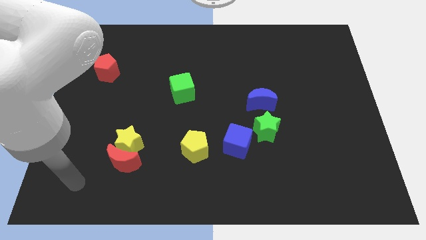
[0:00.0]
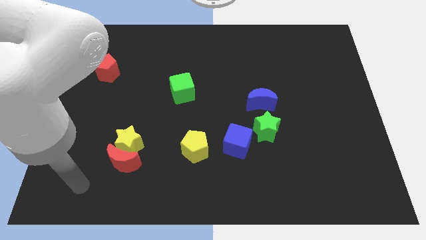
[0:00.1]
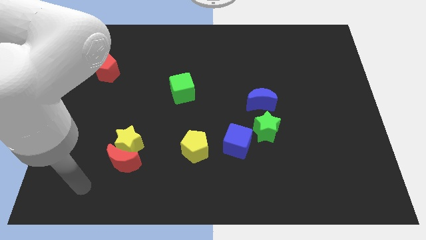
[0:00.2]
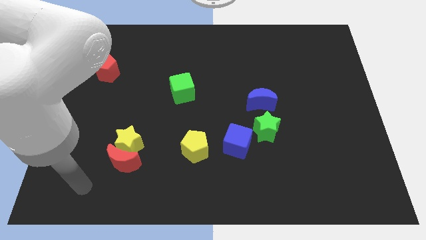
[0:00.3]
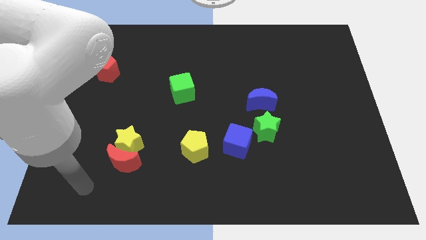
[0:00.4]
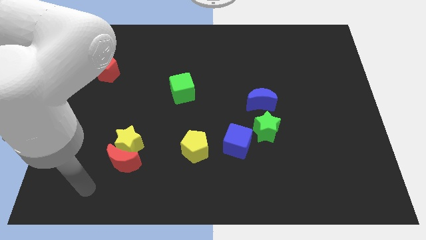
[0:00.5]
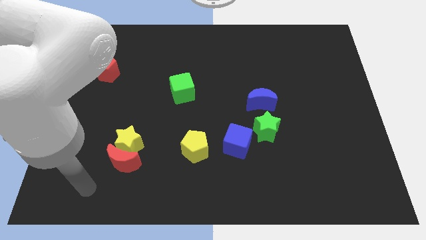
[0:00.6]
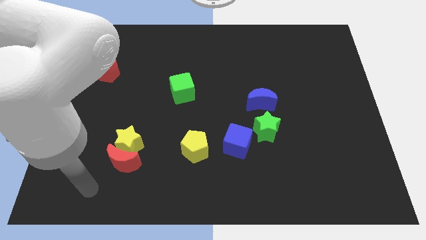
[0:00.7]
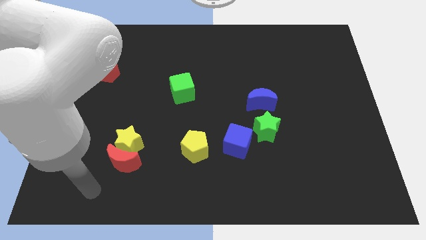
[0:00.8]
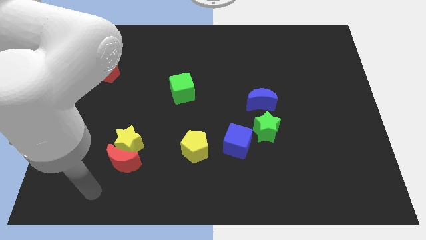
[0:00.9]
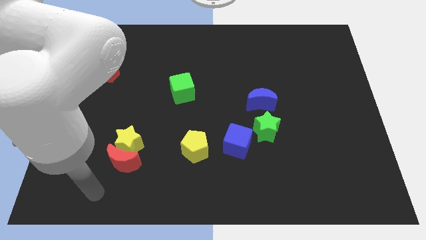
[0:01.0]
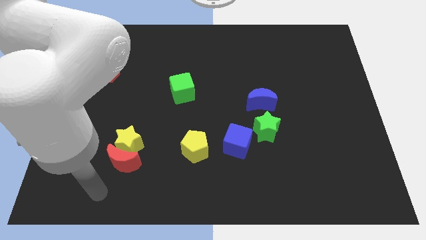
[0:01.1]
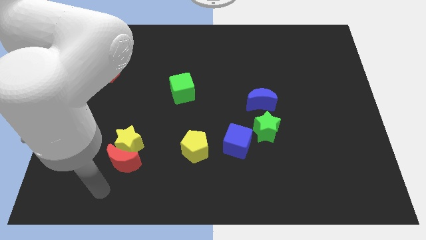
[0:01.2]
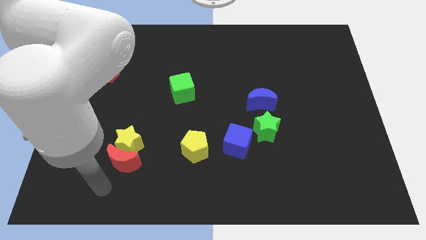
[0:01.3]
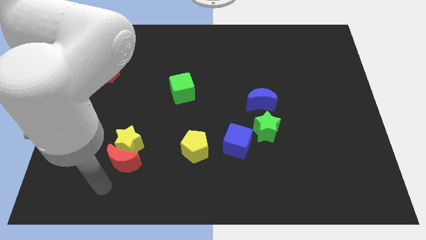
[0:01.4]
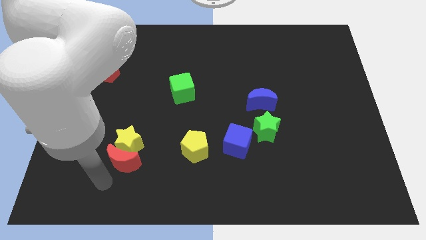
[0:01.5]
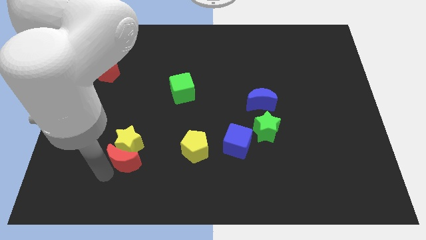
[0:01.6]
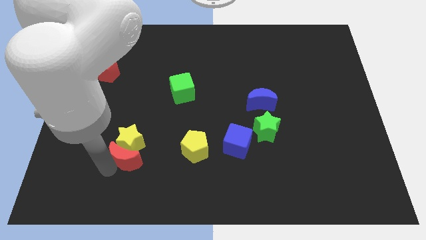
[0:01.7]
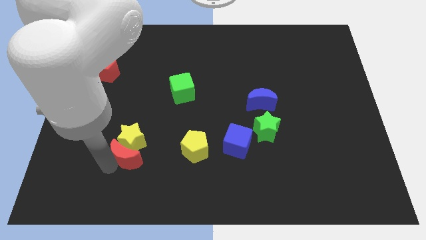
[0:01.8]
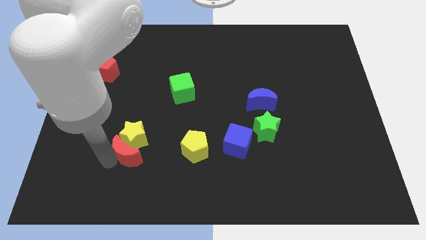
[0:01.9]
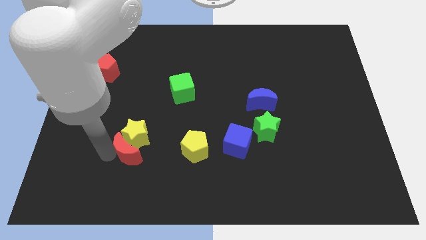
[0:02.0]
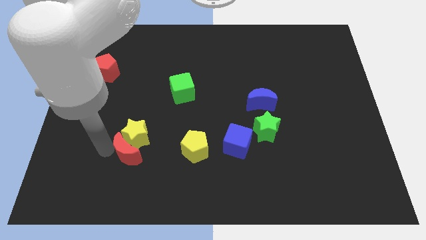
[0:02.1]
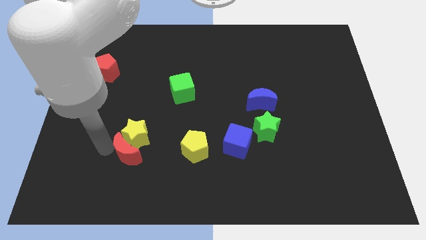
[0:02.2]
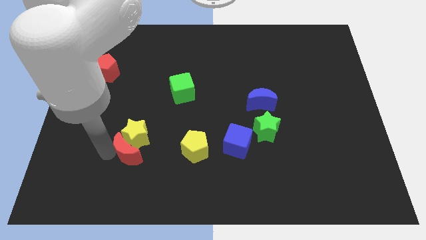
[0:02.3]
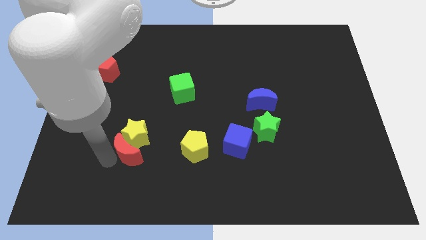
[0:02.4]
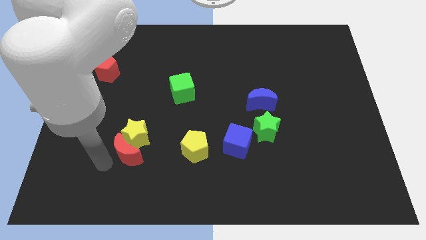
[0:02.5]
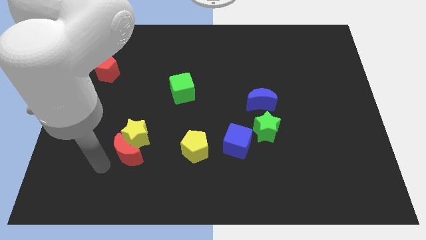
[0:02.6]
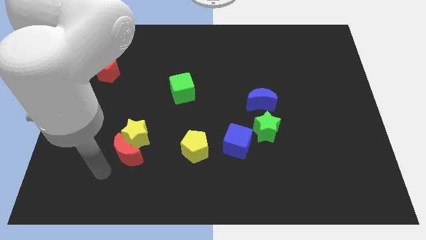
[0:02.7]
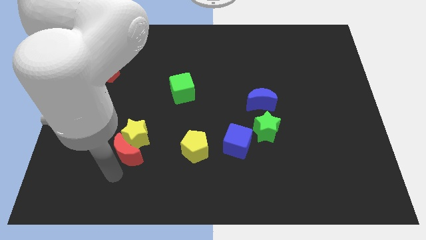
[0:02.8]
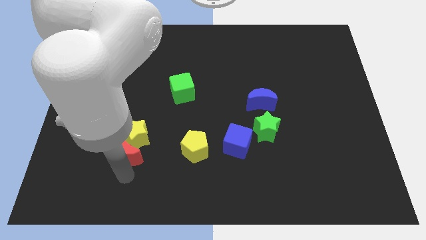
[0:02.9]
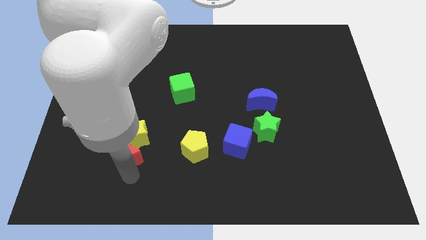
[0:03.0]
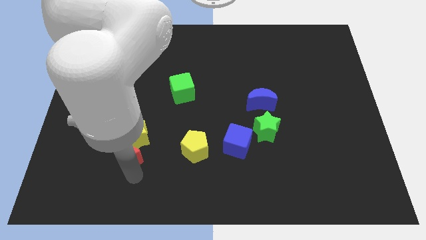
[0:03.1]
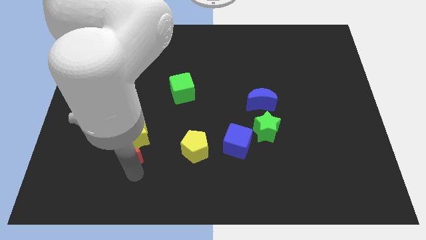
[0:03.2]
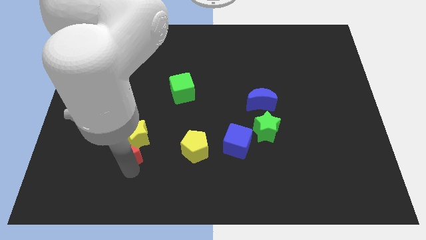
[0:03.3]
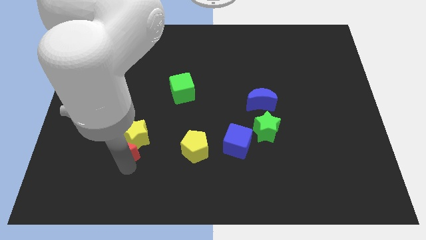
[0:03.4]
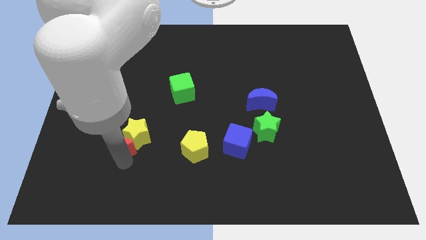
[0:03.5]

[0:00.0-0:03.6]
touch the bottom of red moon

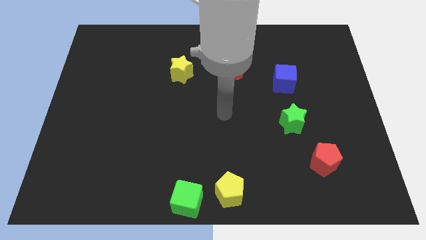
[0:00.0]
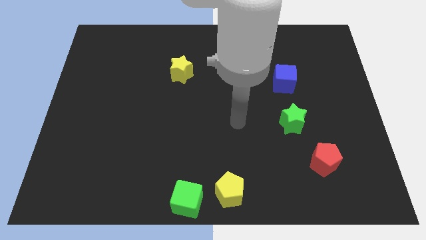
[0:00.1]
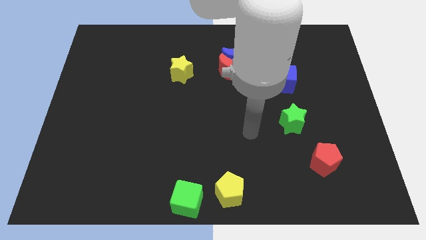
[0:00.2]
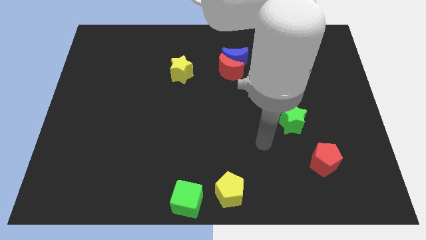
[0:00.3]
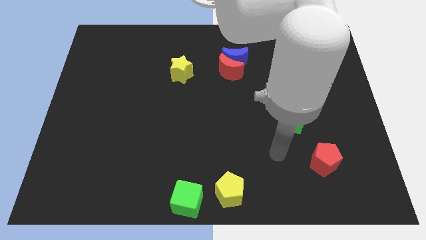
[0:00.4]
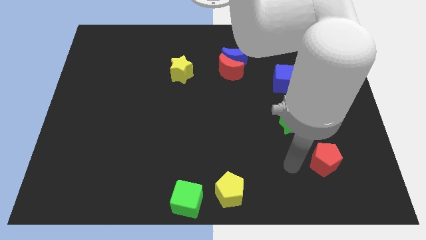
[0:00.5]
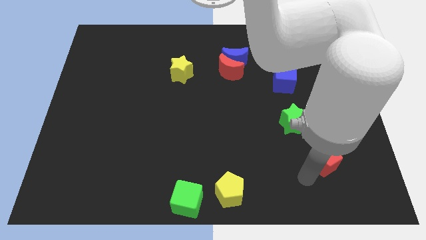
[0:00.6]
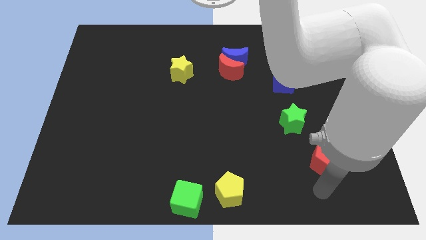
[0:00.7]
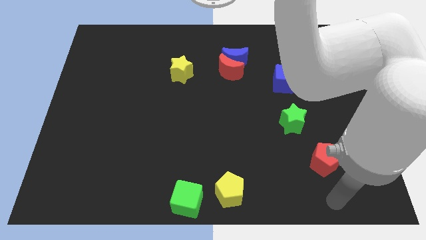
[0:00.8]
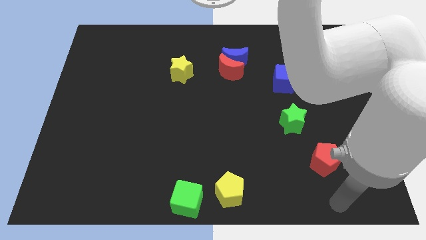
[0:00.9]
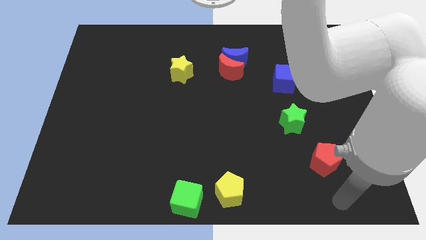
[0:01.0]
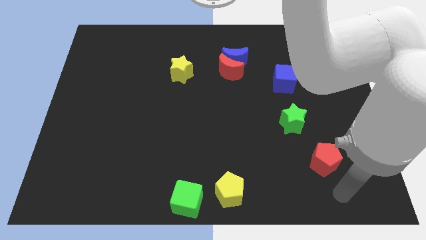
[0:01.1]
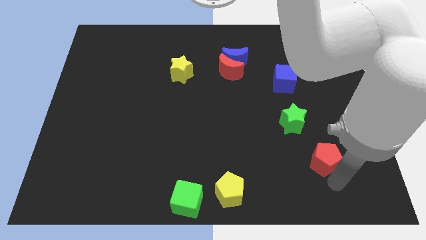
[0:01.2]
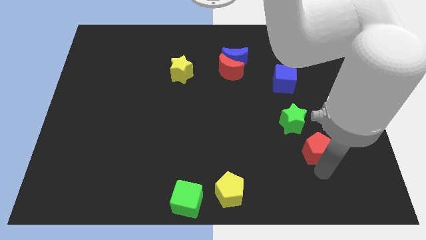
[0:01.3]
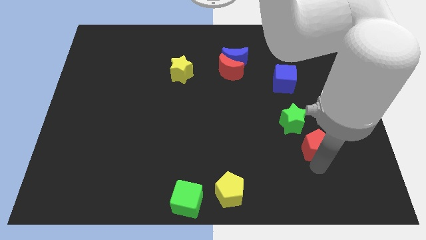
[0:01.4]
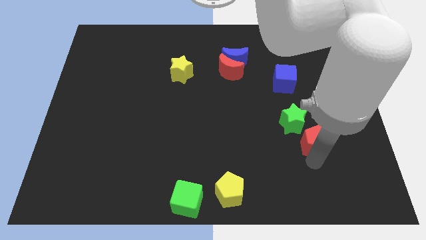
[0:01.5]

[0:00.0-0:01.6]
move the red pentagon to the bottom right of the green star

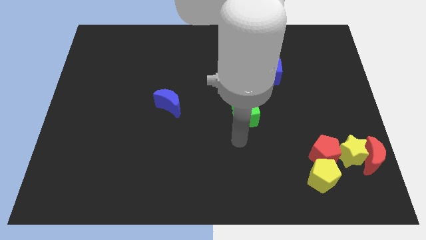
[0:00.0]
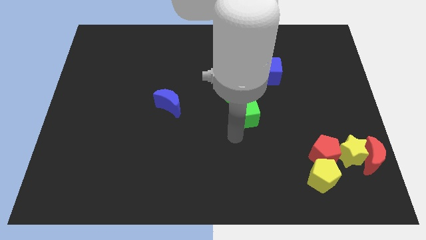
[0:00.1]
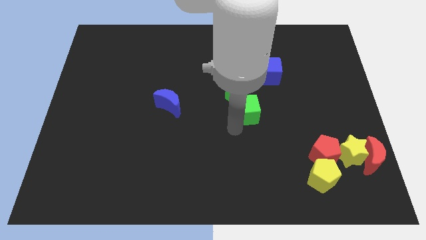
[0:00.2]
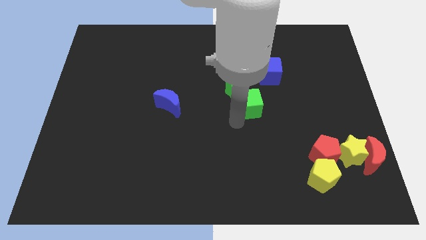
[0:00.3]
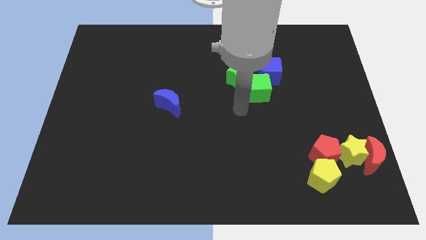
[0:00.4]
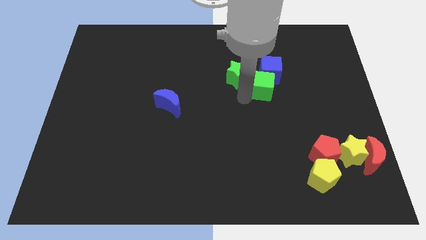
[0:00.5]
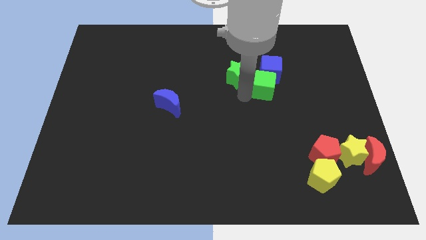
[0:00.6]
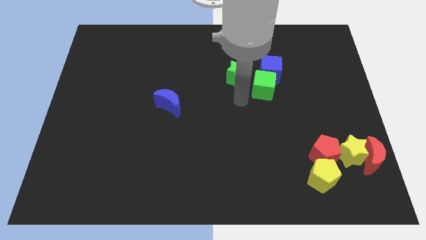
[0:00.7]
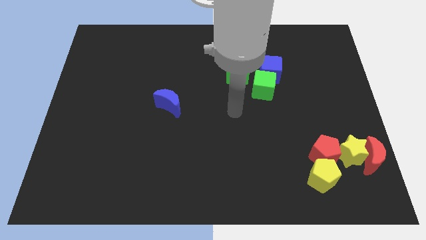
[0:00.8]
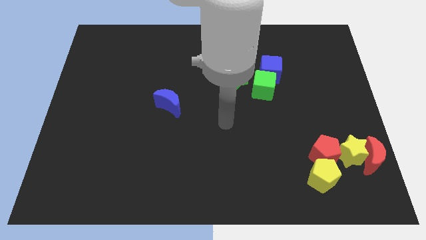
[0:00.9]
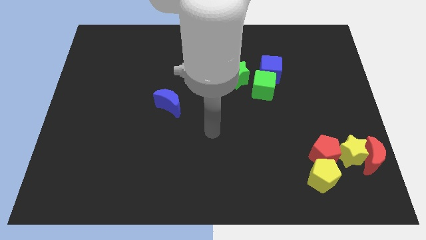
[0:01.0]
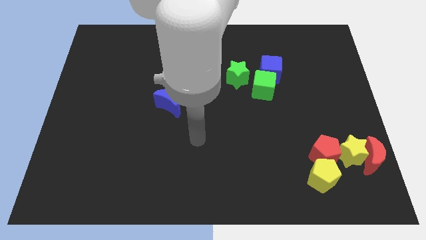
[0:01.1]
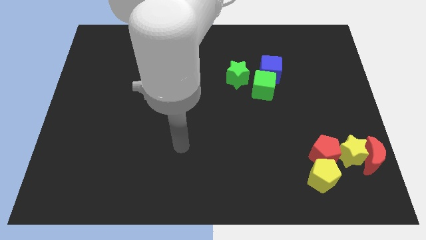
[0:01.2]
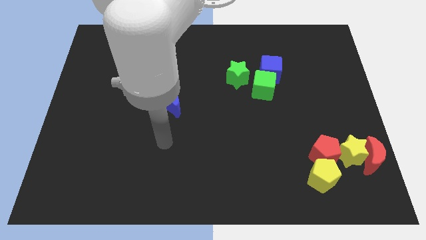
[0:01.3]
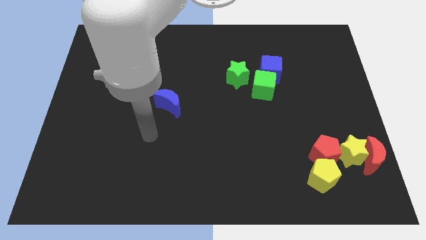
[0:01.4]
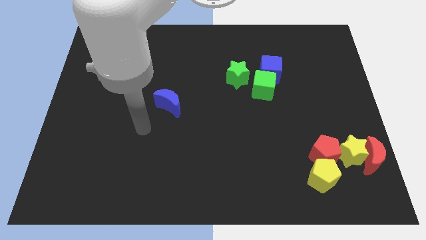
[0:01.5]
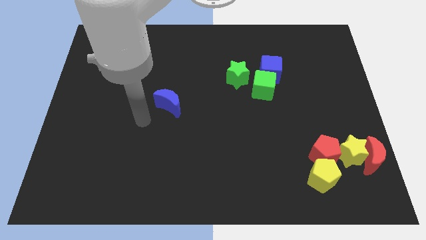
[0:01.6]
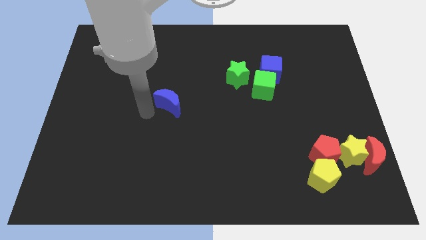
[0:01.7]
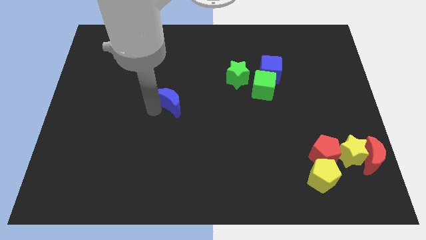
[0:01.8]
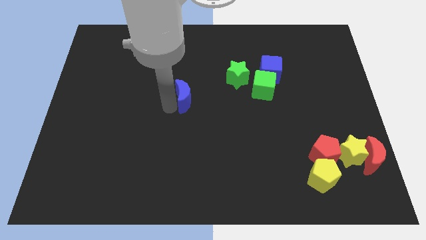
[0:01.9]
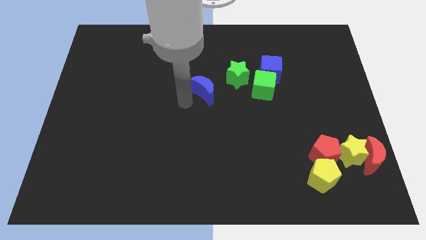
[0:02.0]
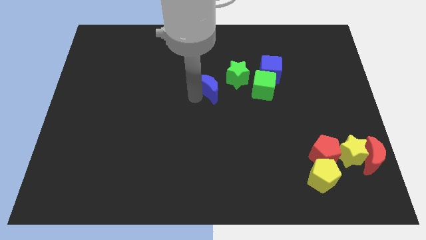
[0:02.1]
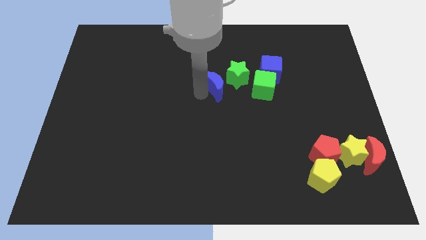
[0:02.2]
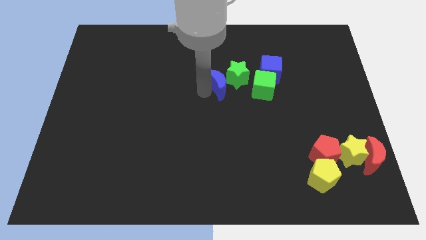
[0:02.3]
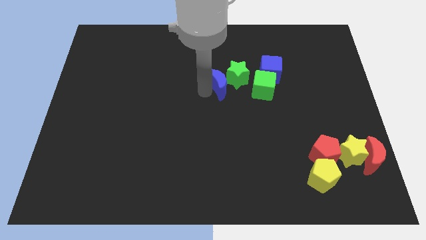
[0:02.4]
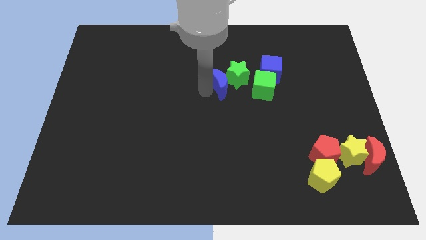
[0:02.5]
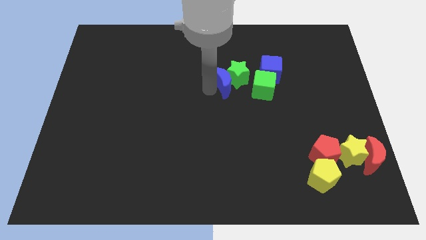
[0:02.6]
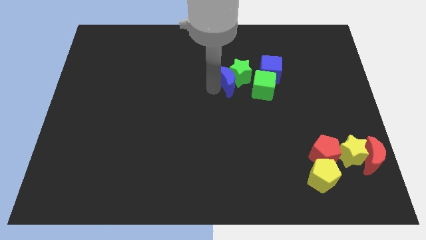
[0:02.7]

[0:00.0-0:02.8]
push the green and blue blocks towards the top side of the board

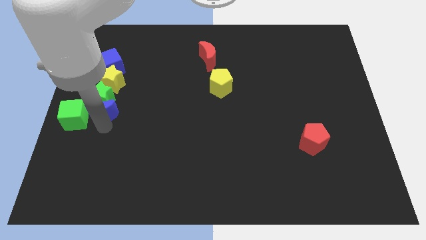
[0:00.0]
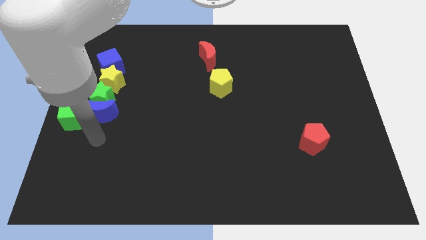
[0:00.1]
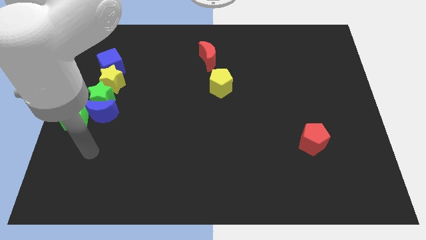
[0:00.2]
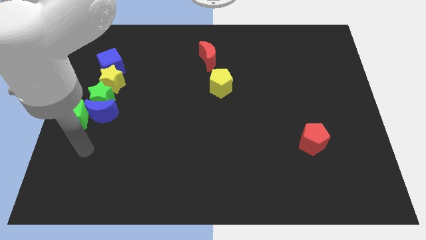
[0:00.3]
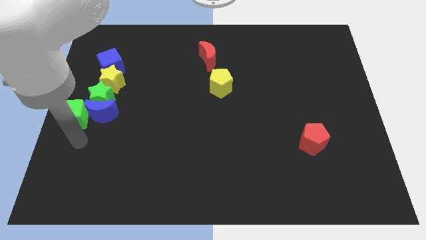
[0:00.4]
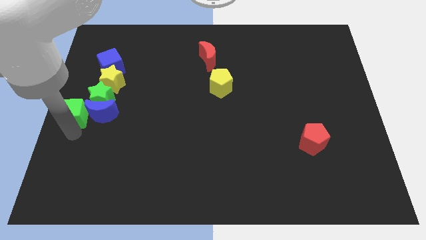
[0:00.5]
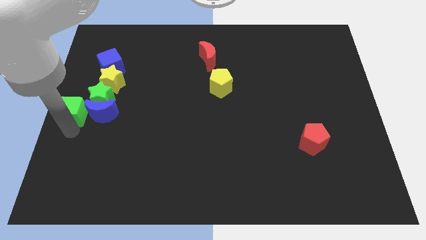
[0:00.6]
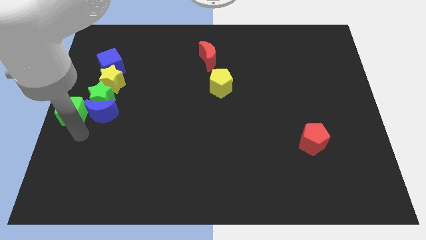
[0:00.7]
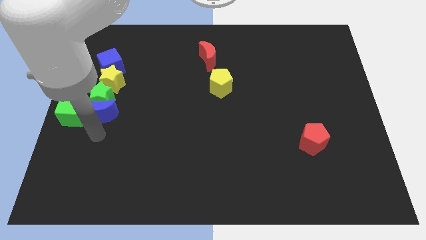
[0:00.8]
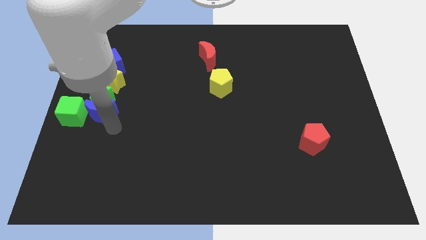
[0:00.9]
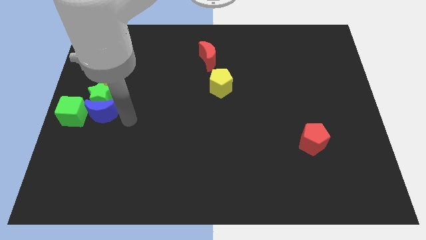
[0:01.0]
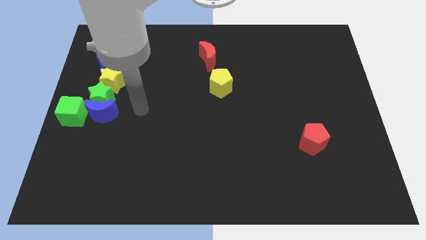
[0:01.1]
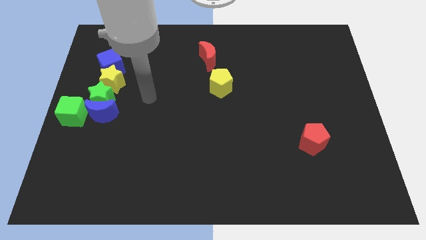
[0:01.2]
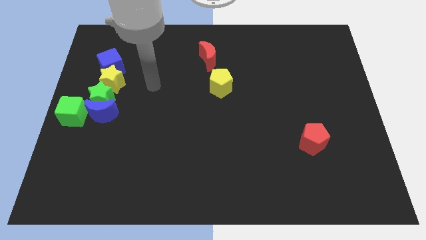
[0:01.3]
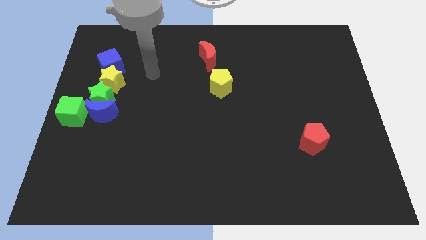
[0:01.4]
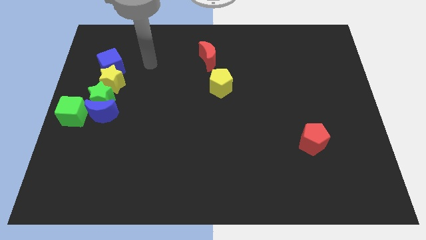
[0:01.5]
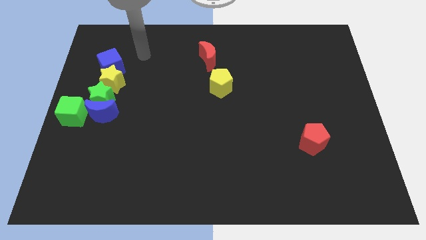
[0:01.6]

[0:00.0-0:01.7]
go near the blue cube
